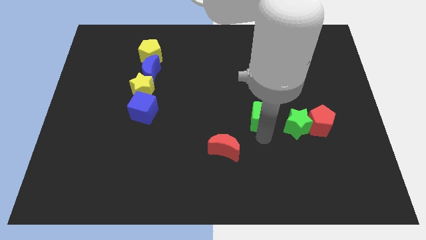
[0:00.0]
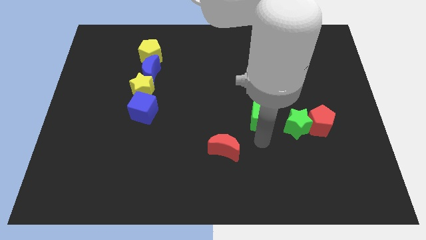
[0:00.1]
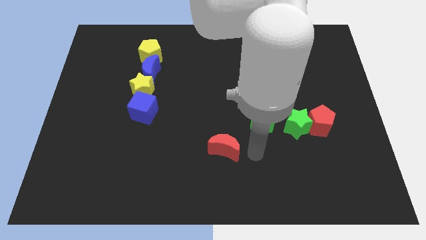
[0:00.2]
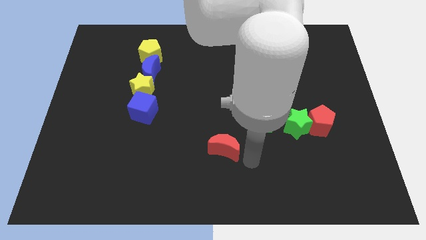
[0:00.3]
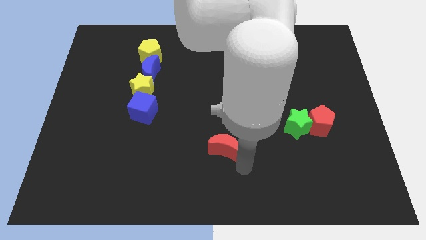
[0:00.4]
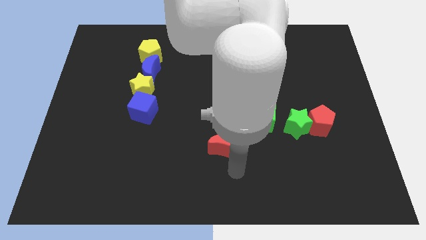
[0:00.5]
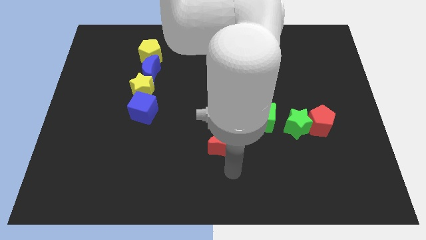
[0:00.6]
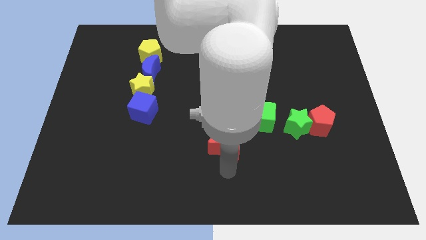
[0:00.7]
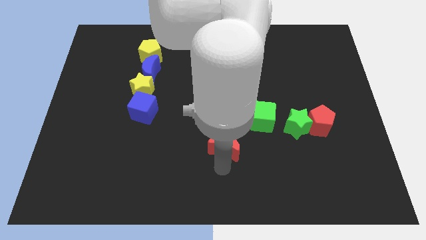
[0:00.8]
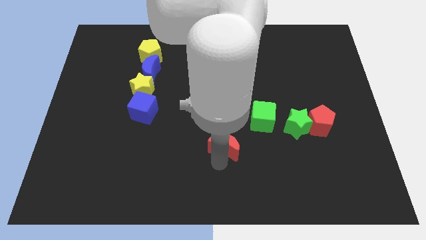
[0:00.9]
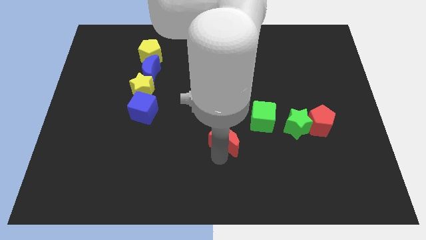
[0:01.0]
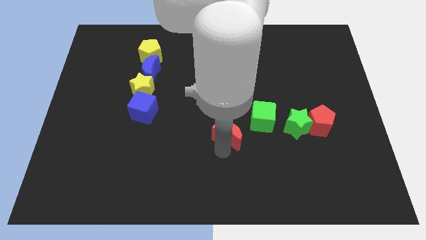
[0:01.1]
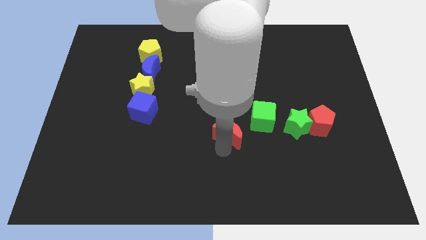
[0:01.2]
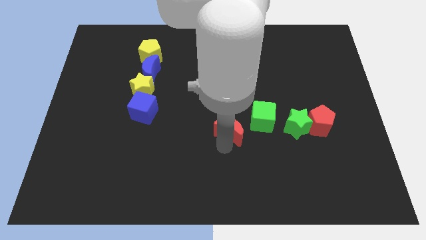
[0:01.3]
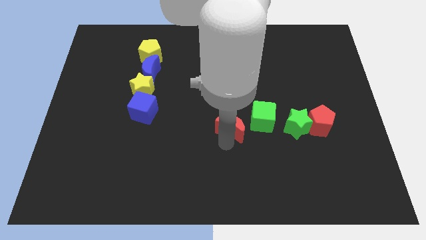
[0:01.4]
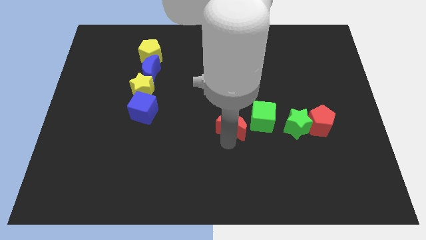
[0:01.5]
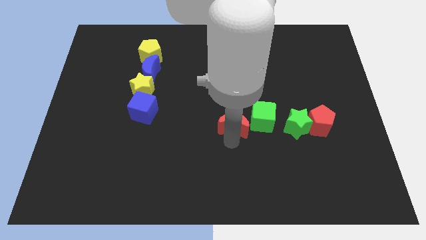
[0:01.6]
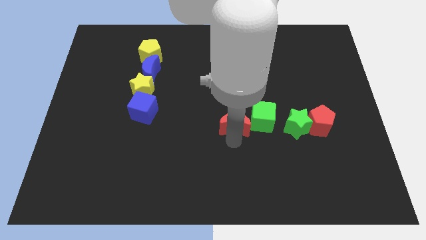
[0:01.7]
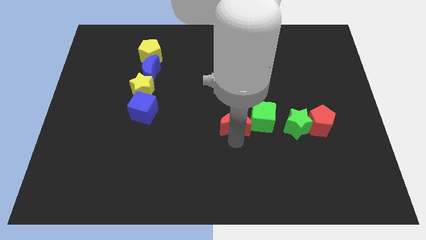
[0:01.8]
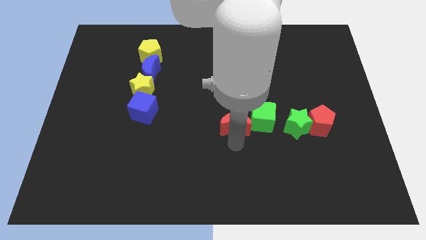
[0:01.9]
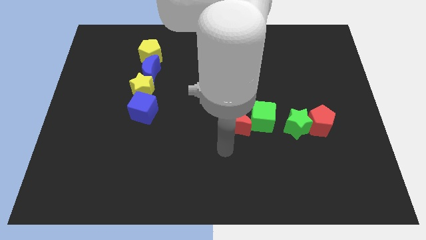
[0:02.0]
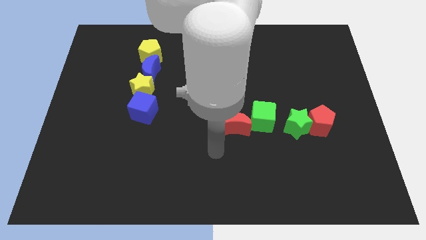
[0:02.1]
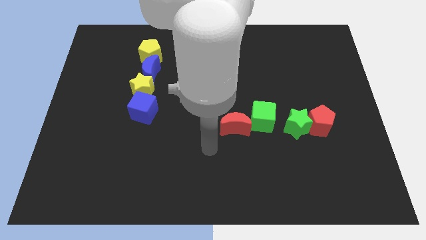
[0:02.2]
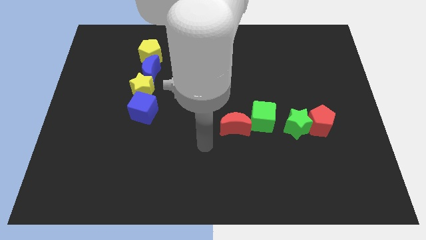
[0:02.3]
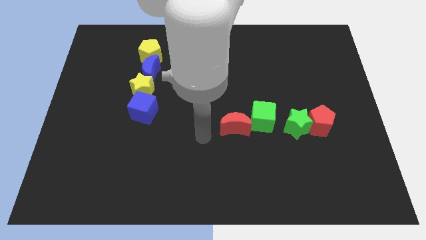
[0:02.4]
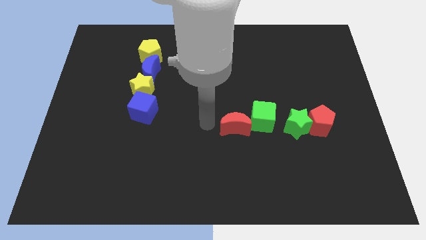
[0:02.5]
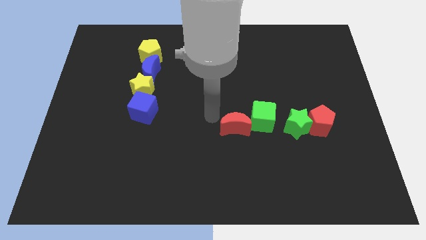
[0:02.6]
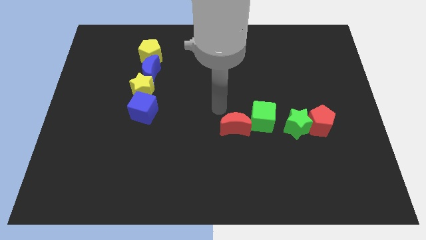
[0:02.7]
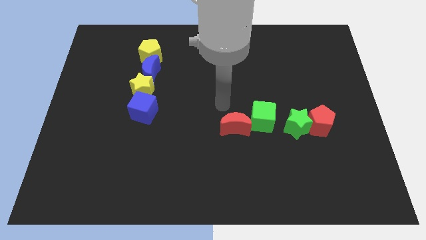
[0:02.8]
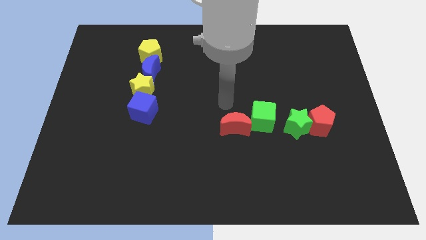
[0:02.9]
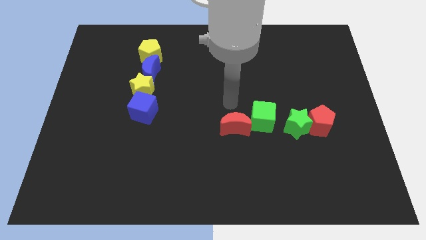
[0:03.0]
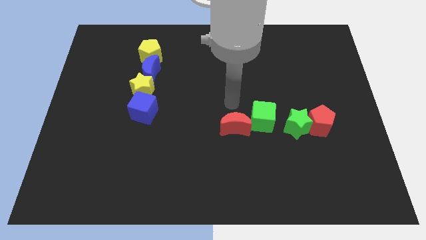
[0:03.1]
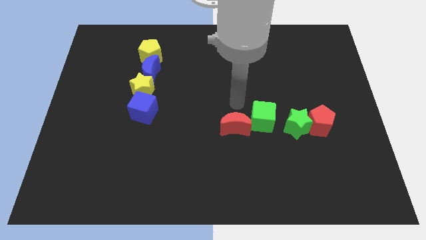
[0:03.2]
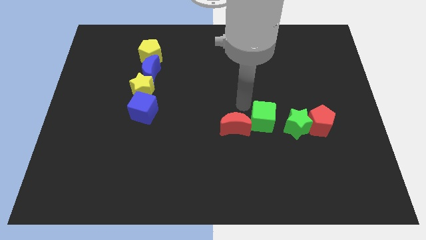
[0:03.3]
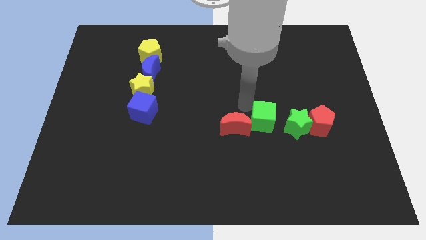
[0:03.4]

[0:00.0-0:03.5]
move the red crescent towards the center of the board

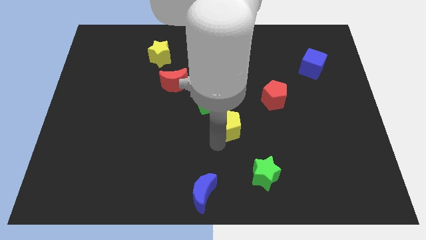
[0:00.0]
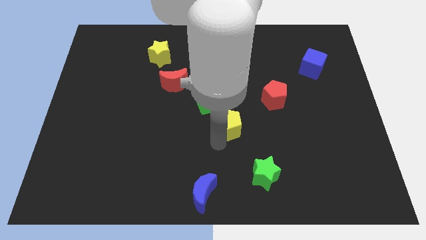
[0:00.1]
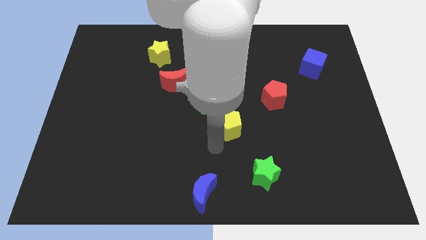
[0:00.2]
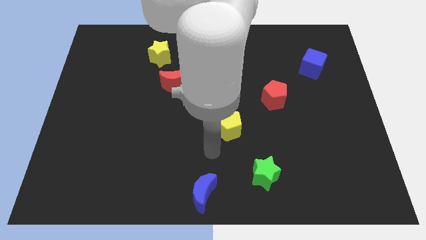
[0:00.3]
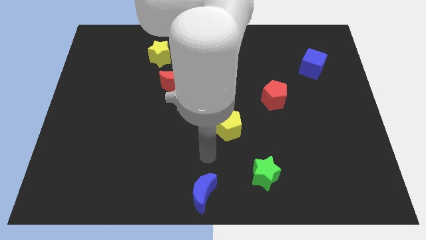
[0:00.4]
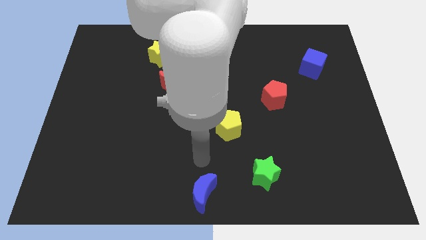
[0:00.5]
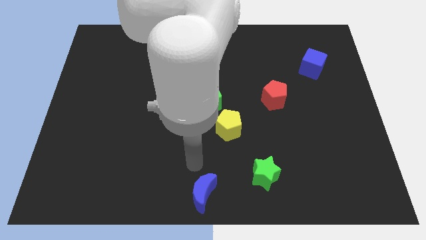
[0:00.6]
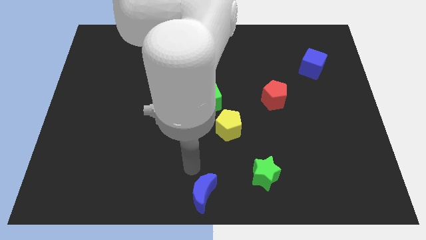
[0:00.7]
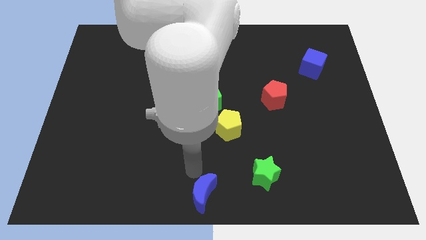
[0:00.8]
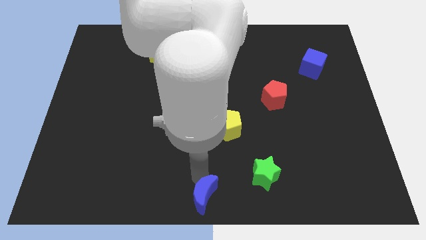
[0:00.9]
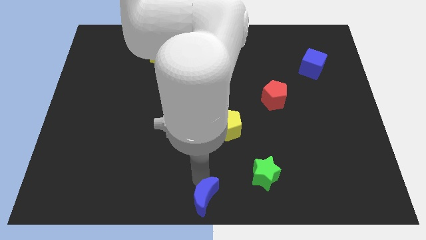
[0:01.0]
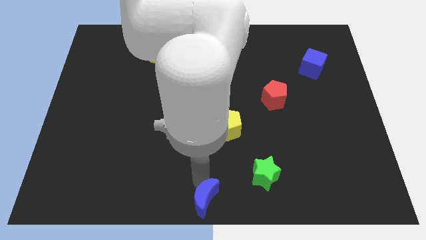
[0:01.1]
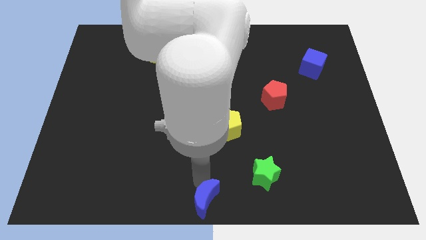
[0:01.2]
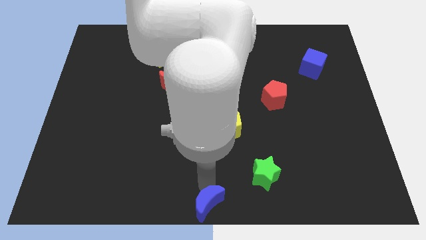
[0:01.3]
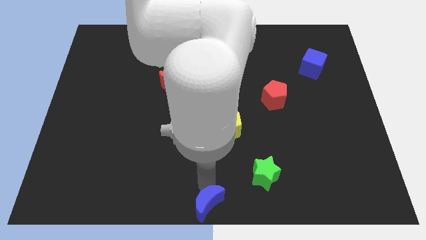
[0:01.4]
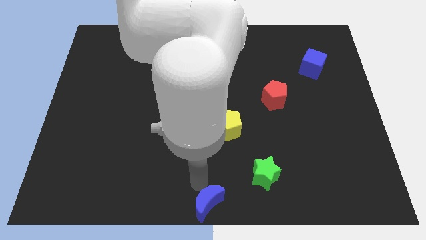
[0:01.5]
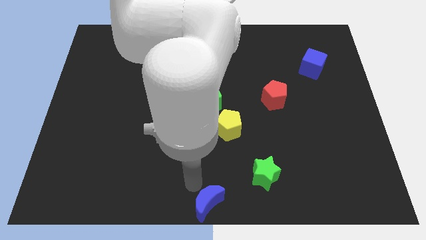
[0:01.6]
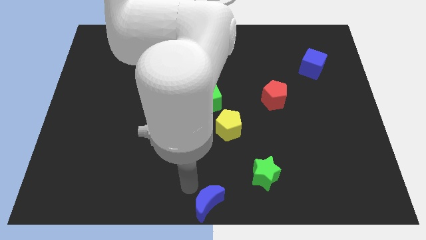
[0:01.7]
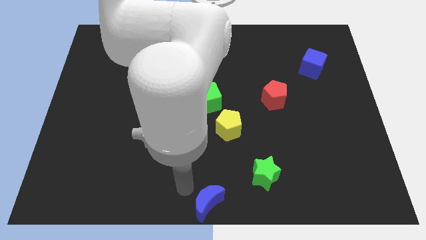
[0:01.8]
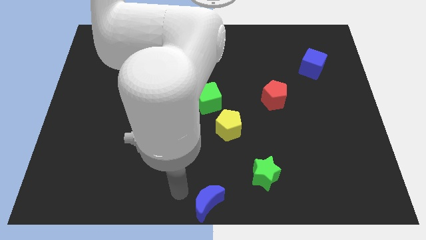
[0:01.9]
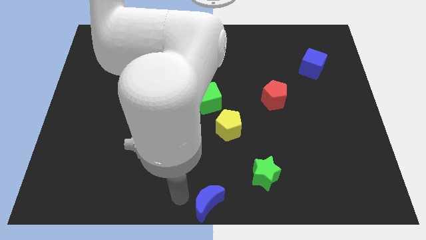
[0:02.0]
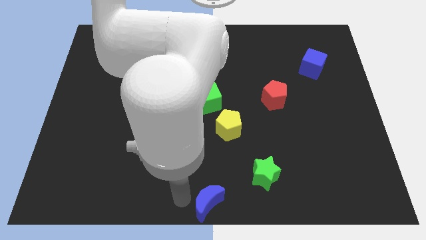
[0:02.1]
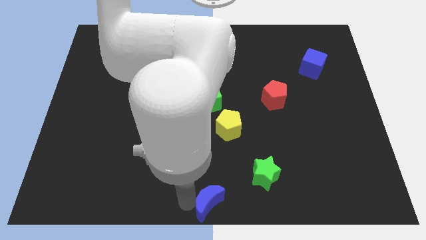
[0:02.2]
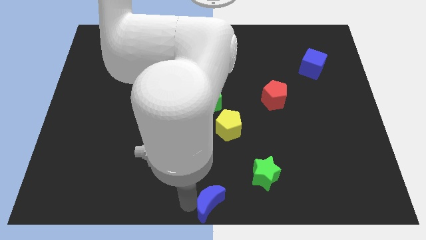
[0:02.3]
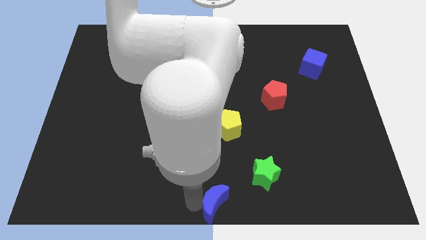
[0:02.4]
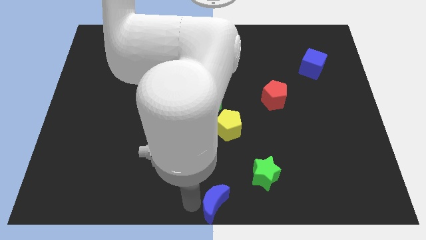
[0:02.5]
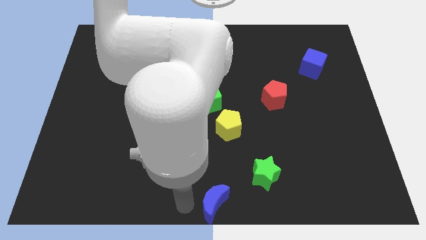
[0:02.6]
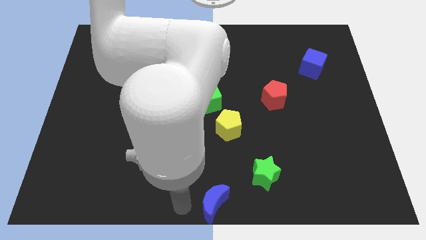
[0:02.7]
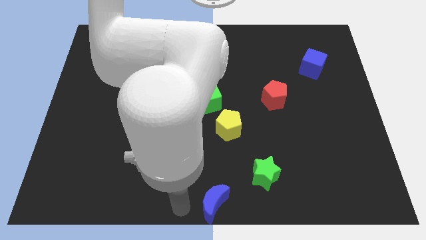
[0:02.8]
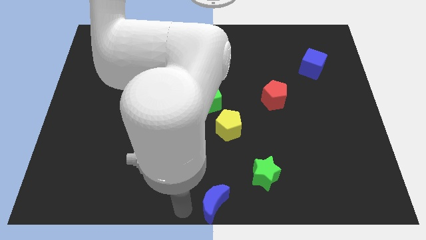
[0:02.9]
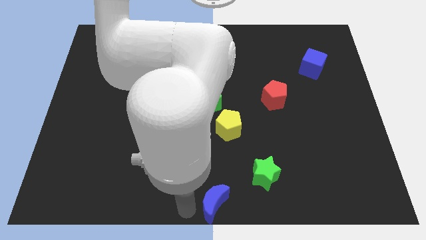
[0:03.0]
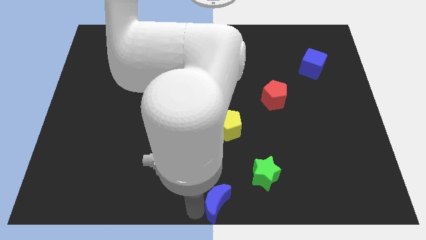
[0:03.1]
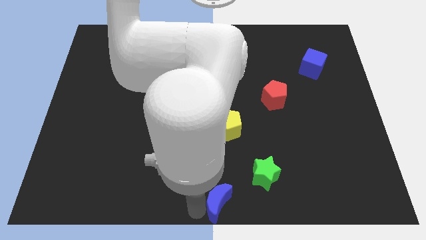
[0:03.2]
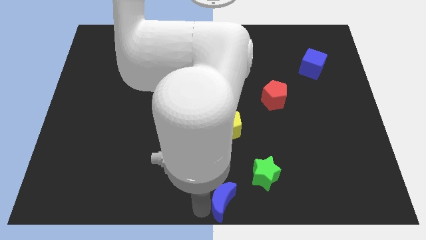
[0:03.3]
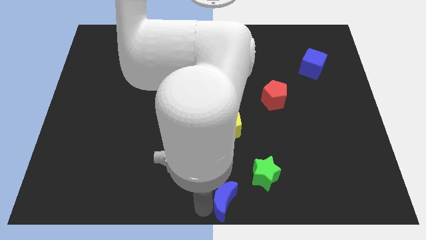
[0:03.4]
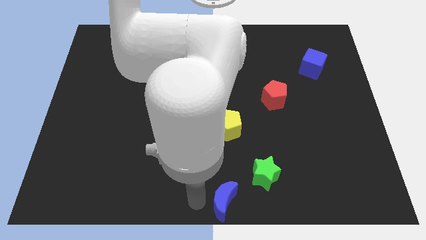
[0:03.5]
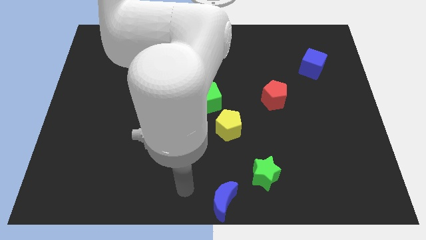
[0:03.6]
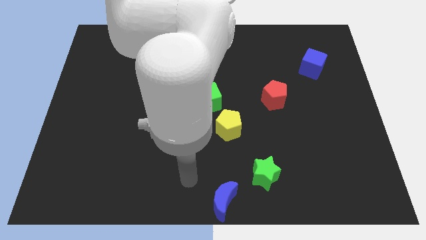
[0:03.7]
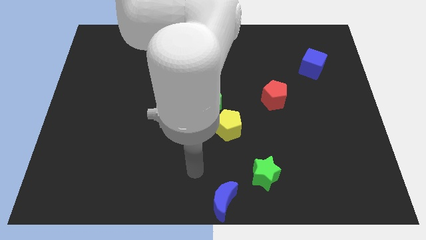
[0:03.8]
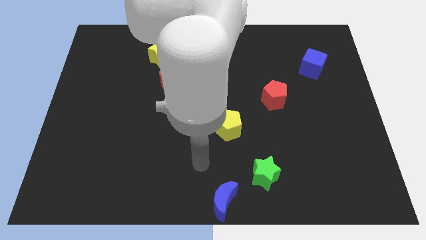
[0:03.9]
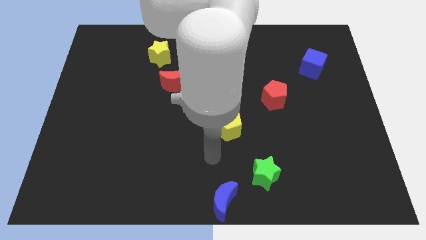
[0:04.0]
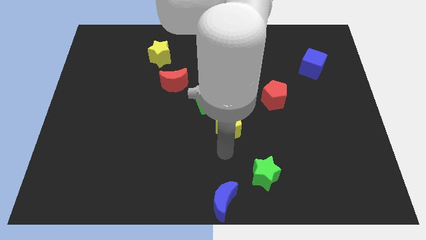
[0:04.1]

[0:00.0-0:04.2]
move blue moon to the bottom center

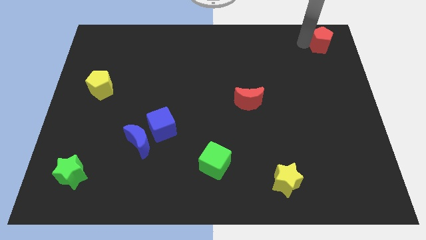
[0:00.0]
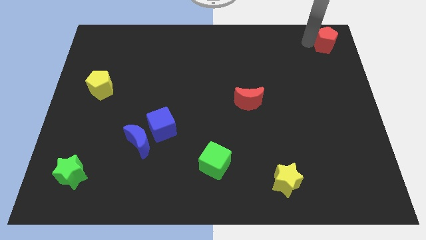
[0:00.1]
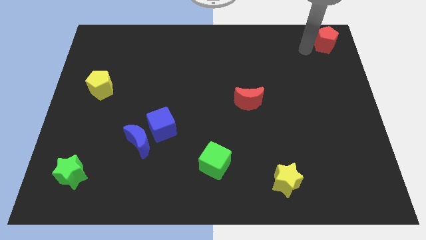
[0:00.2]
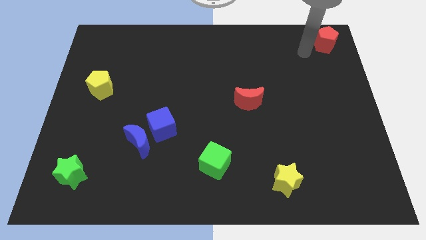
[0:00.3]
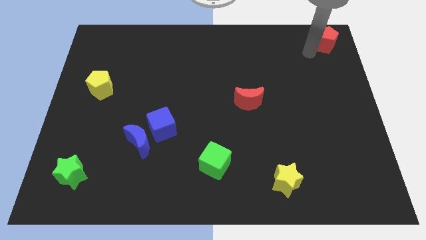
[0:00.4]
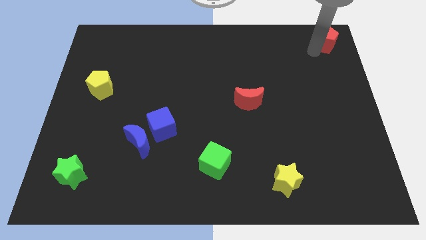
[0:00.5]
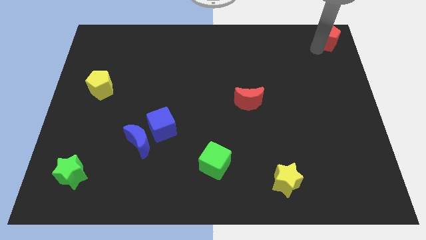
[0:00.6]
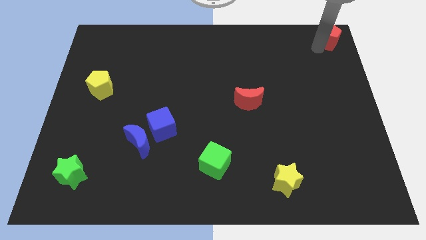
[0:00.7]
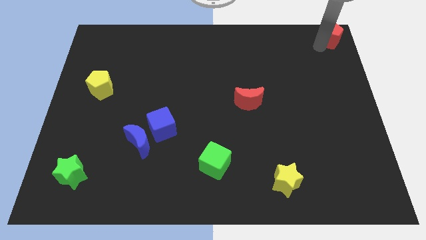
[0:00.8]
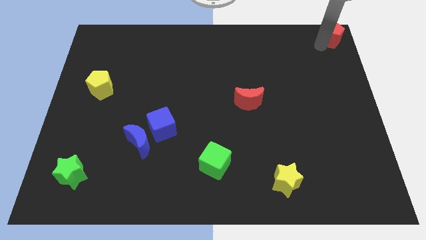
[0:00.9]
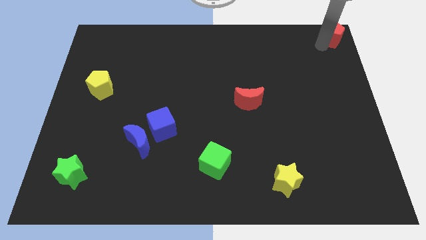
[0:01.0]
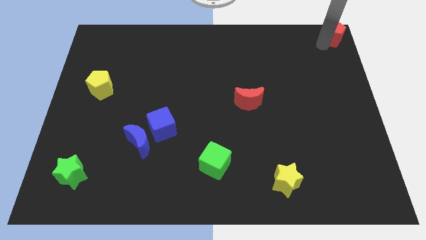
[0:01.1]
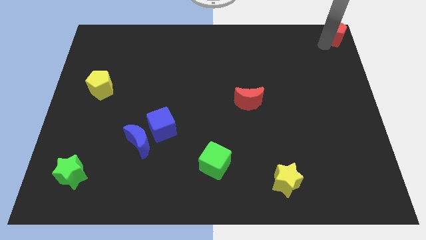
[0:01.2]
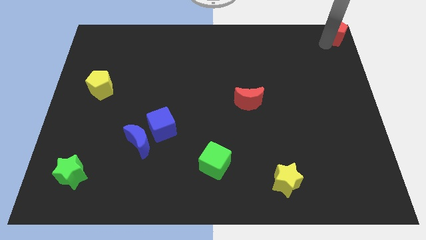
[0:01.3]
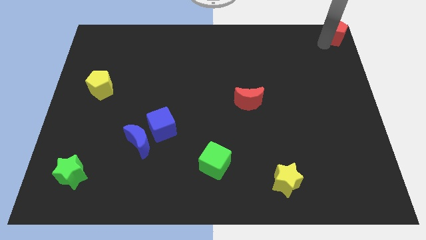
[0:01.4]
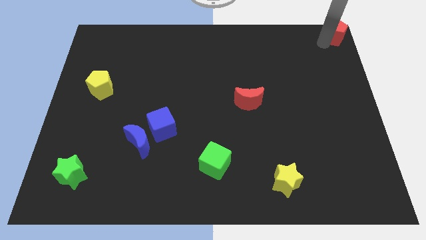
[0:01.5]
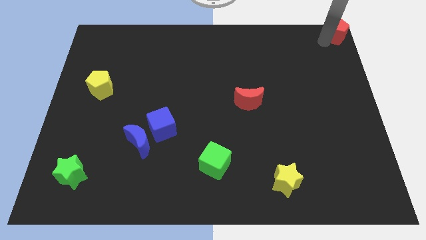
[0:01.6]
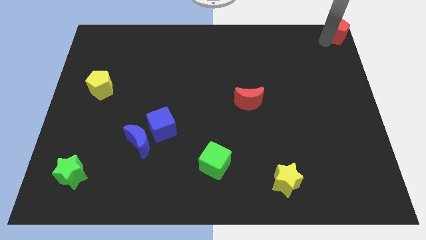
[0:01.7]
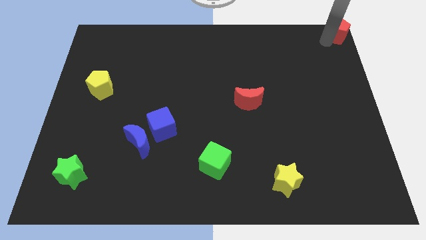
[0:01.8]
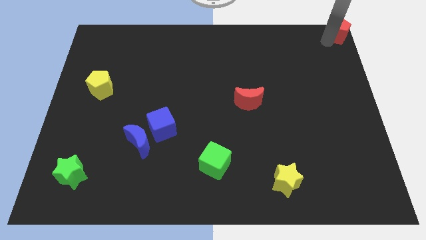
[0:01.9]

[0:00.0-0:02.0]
place the red pentagon at the top right corner of the board
